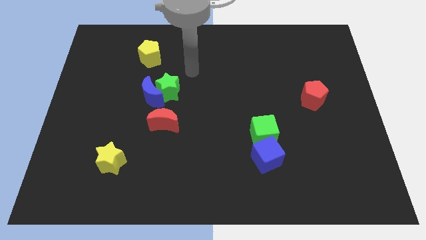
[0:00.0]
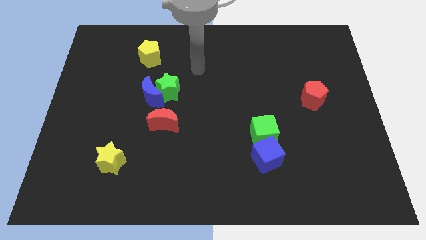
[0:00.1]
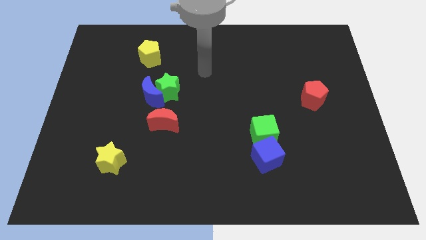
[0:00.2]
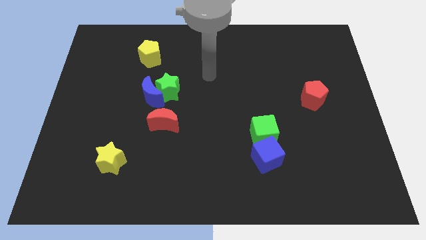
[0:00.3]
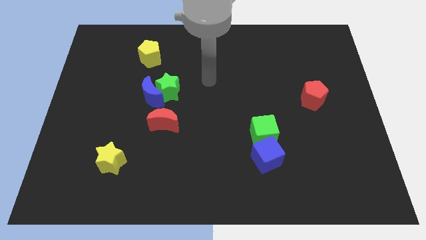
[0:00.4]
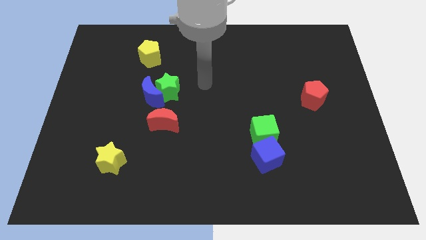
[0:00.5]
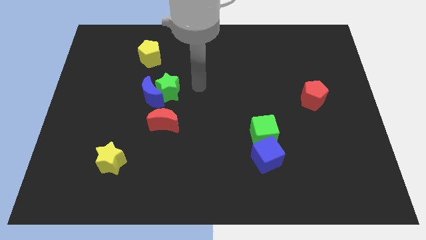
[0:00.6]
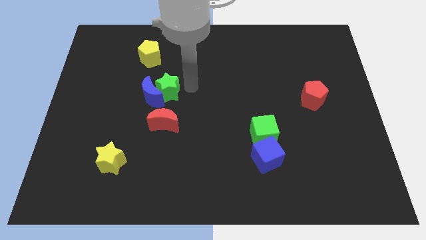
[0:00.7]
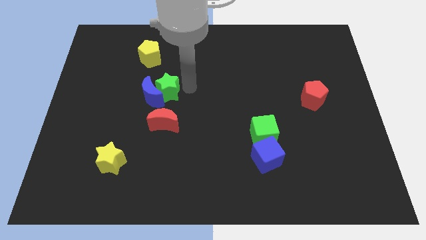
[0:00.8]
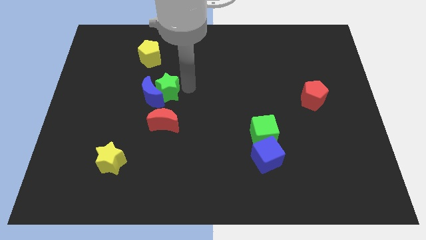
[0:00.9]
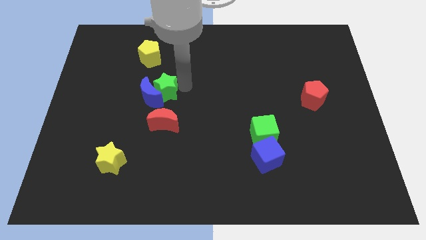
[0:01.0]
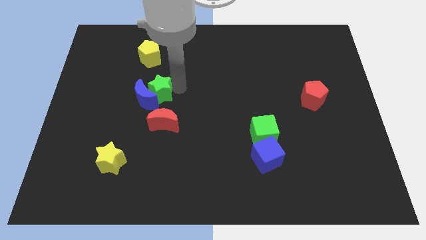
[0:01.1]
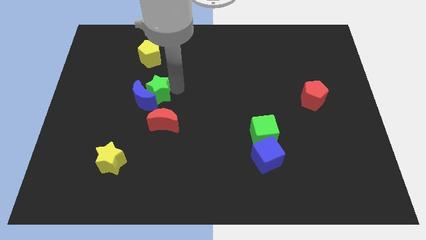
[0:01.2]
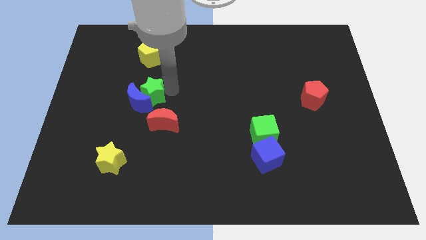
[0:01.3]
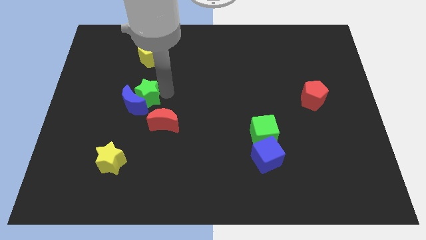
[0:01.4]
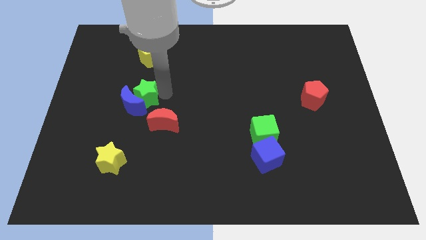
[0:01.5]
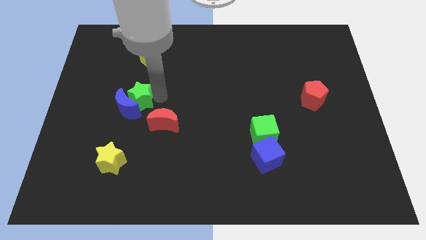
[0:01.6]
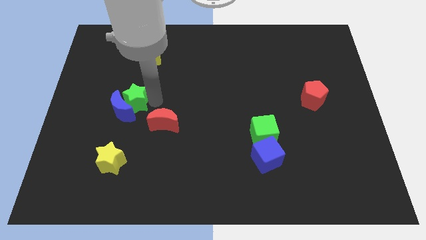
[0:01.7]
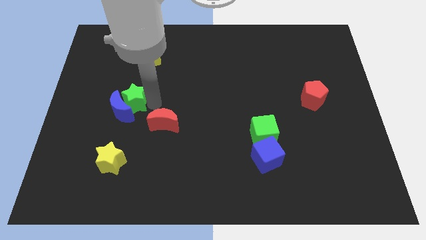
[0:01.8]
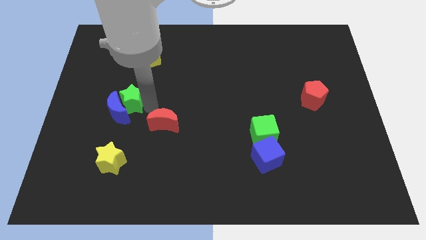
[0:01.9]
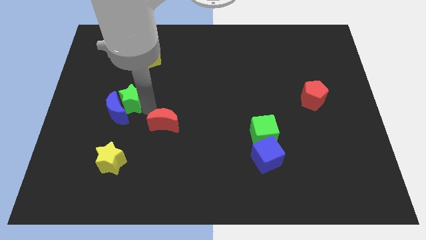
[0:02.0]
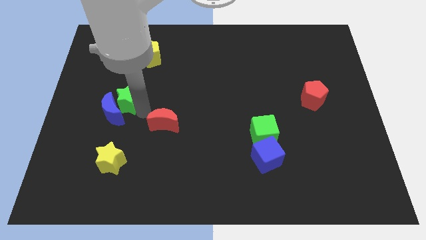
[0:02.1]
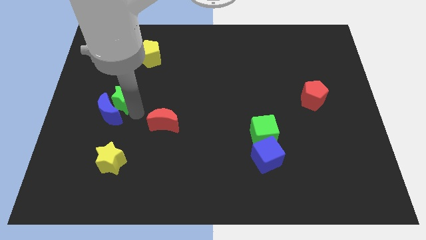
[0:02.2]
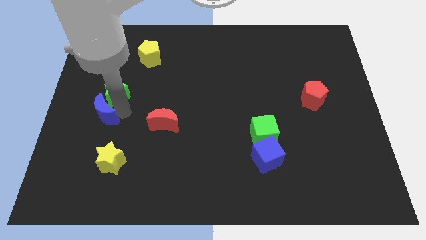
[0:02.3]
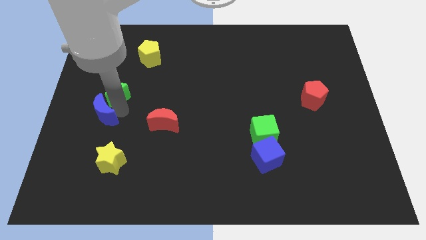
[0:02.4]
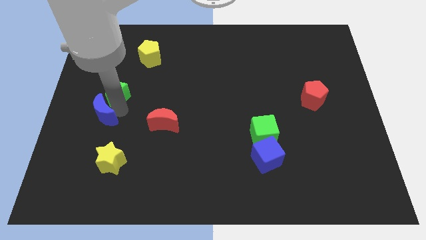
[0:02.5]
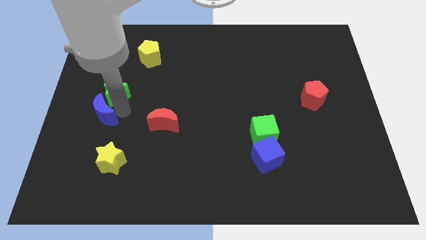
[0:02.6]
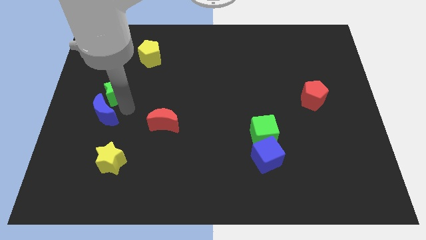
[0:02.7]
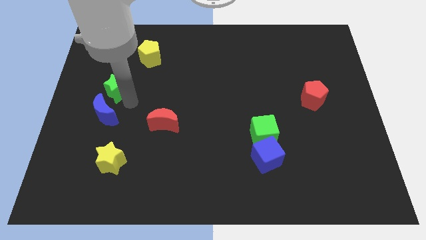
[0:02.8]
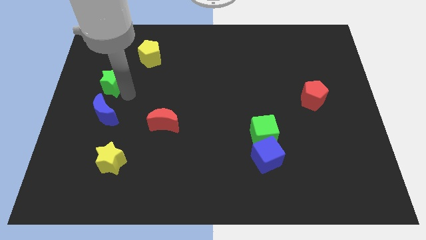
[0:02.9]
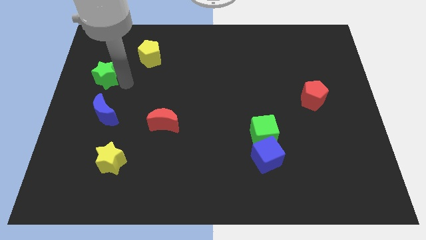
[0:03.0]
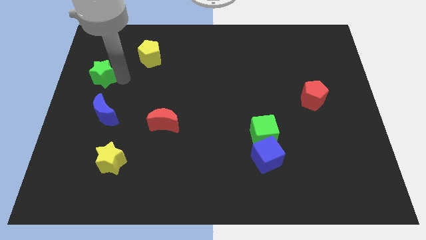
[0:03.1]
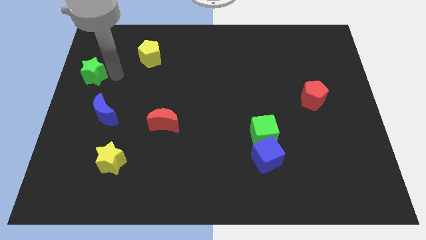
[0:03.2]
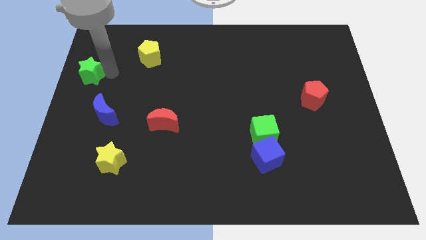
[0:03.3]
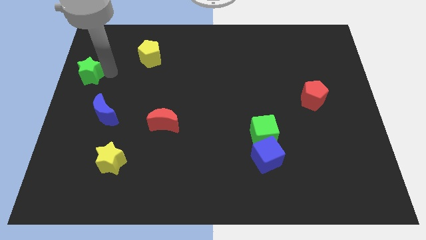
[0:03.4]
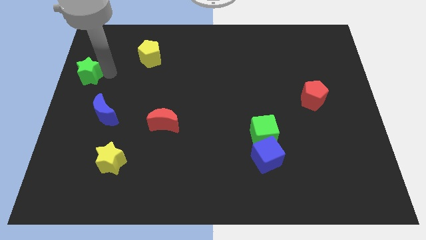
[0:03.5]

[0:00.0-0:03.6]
separate the green star from the blue crescent

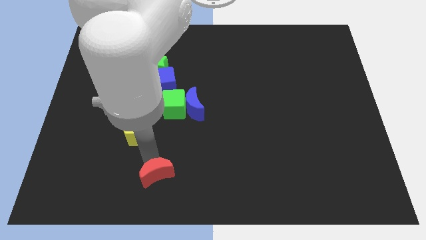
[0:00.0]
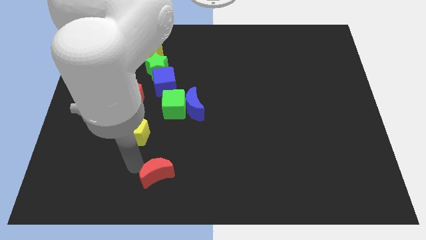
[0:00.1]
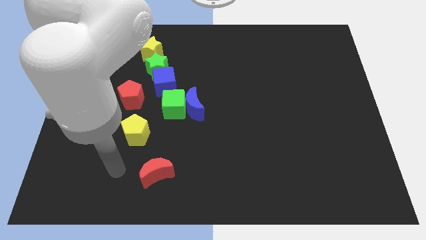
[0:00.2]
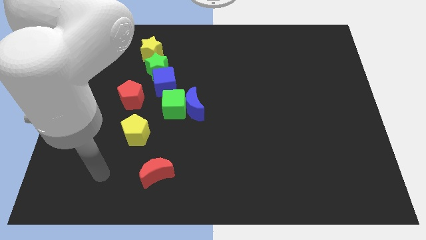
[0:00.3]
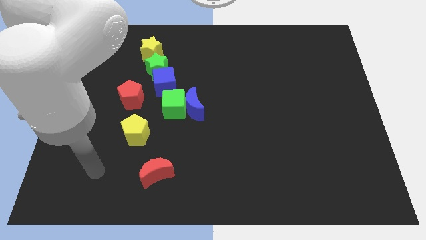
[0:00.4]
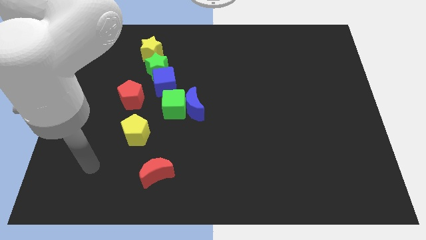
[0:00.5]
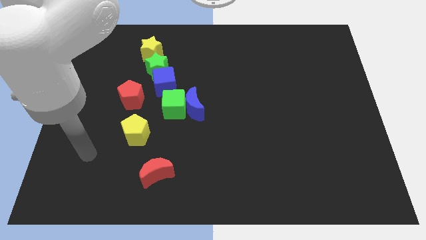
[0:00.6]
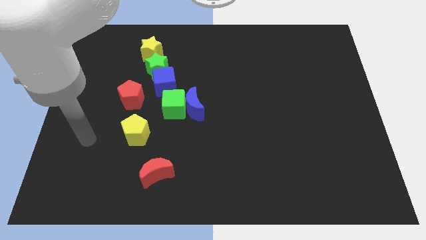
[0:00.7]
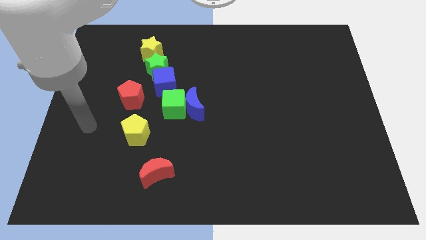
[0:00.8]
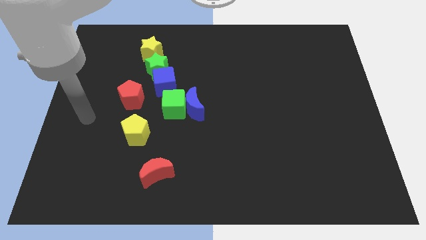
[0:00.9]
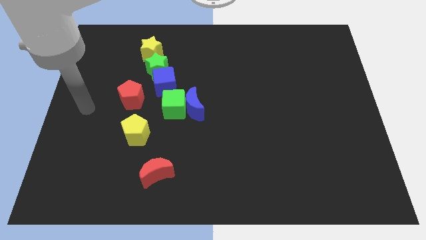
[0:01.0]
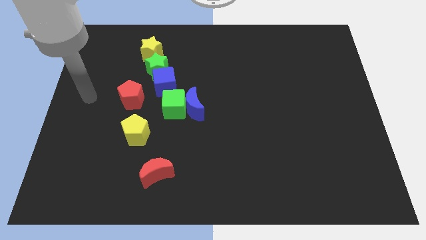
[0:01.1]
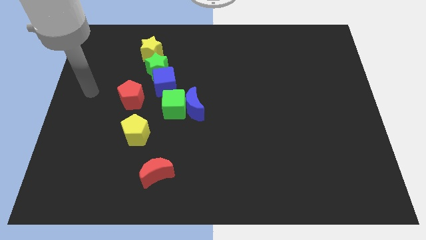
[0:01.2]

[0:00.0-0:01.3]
put your hand parallel left to the red pentagon

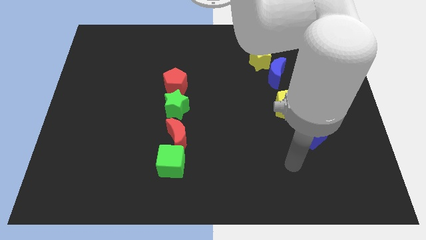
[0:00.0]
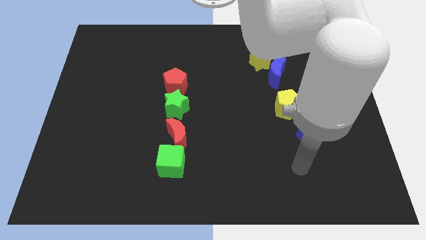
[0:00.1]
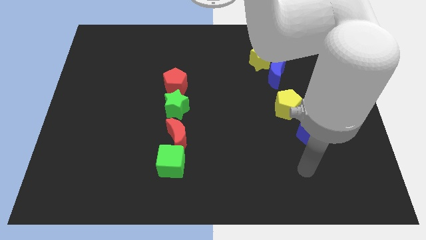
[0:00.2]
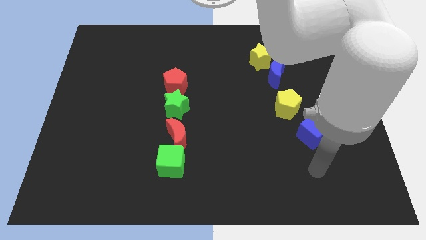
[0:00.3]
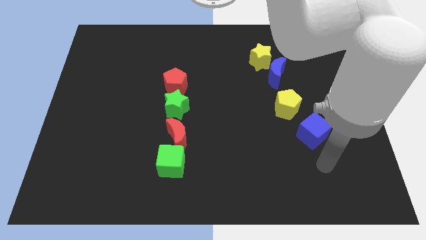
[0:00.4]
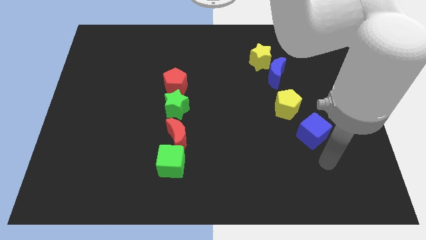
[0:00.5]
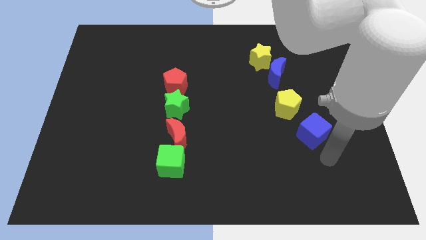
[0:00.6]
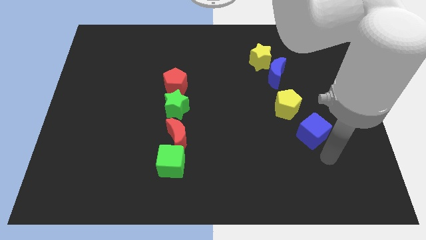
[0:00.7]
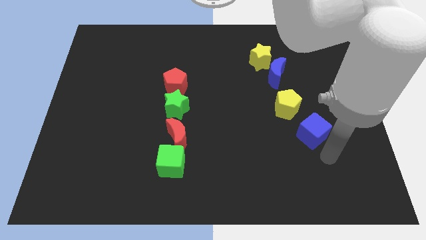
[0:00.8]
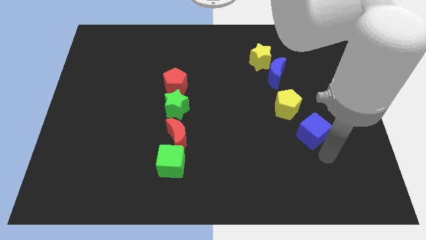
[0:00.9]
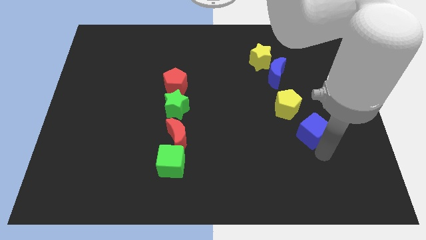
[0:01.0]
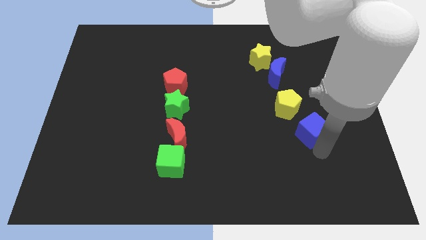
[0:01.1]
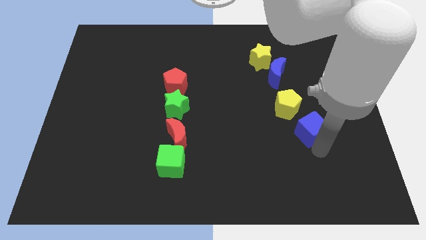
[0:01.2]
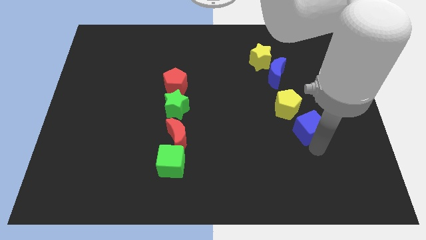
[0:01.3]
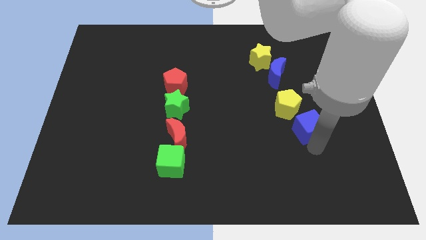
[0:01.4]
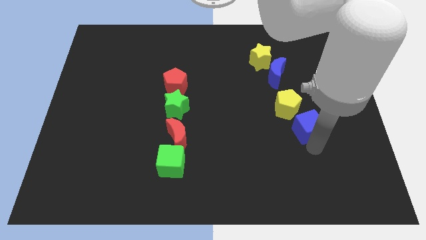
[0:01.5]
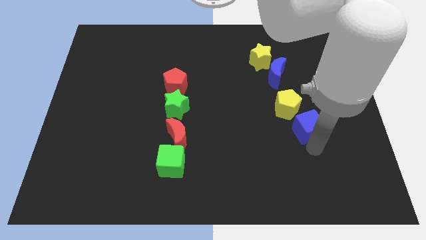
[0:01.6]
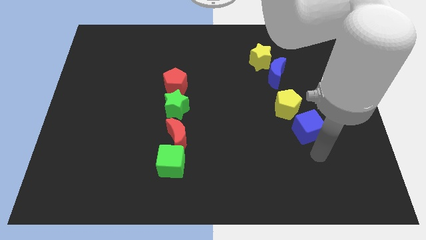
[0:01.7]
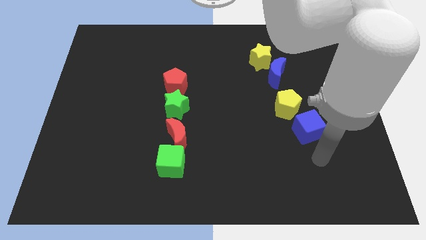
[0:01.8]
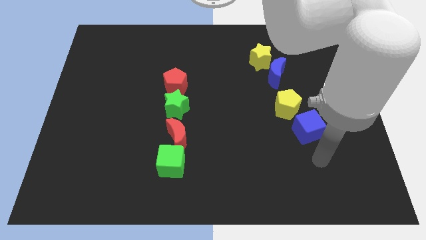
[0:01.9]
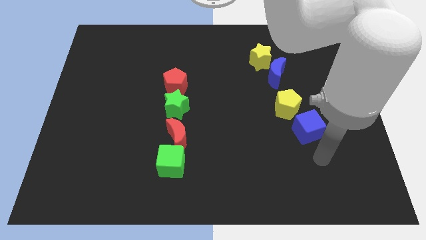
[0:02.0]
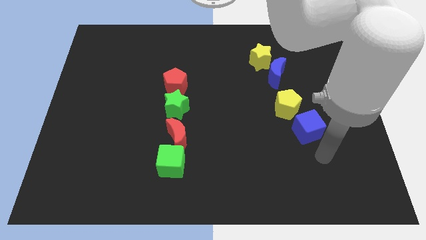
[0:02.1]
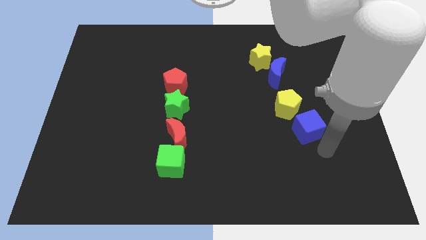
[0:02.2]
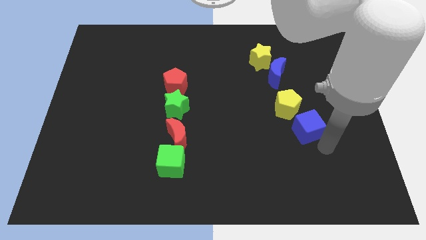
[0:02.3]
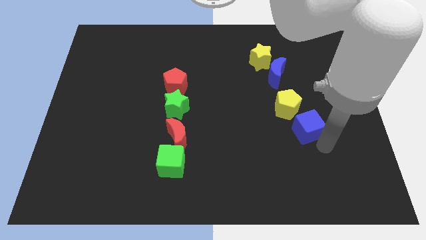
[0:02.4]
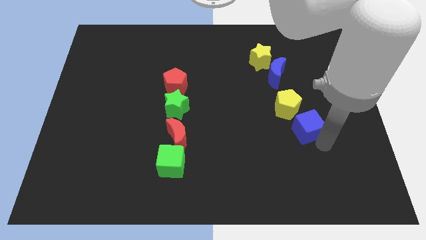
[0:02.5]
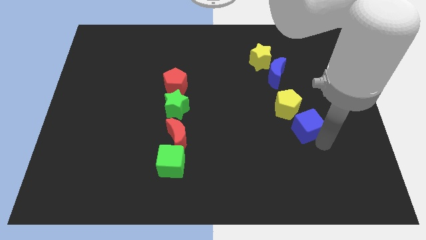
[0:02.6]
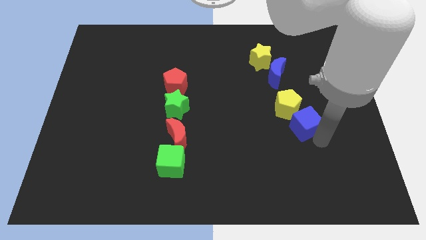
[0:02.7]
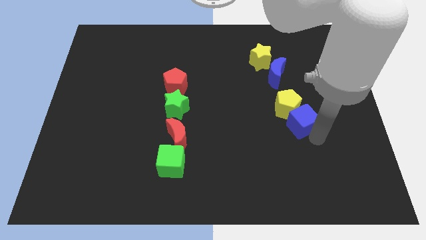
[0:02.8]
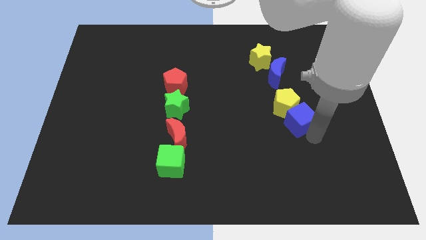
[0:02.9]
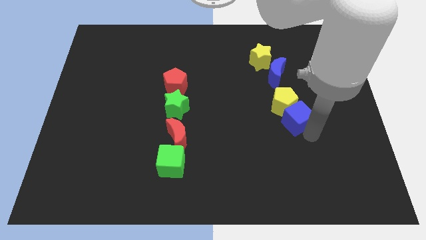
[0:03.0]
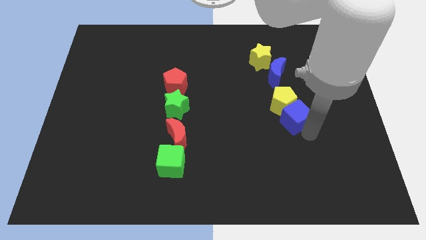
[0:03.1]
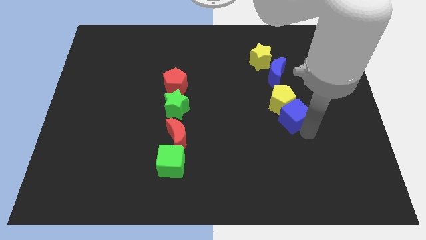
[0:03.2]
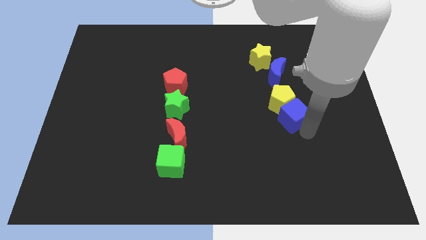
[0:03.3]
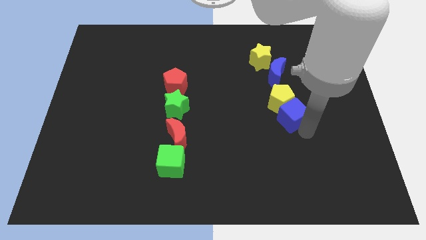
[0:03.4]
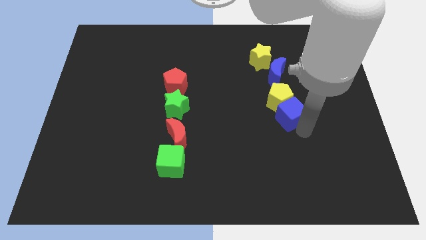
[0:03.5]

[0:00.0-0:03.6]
slide the blue cube into the yellow pentagon

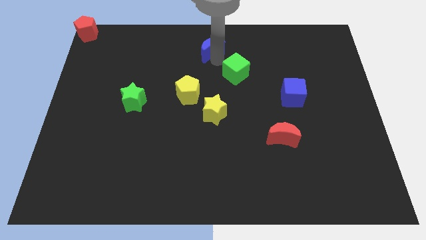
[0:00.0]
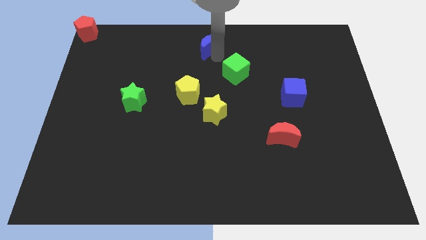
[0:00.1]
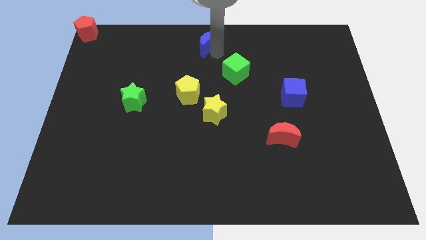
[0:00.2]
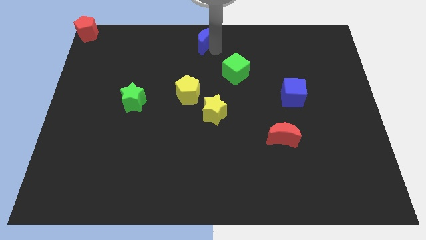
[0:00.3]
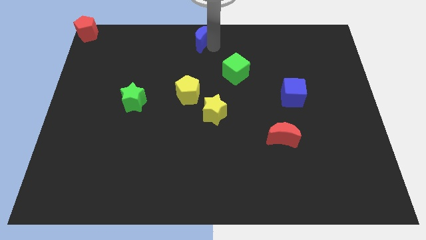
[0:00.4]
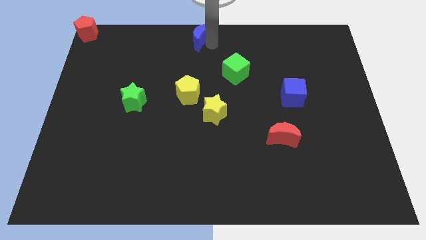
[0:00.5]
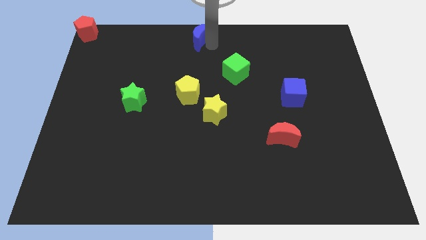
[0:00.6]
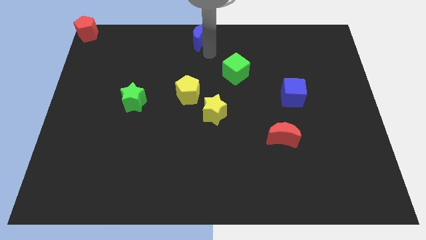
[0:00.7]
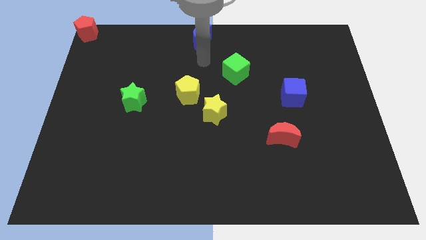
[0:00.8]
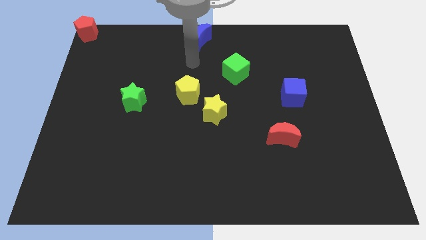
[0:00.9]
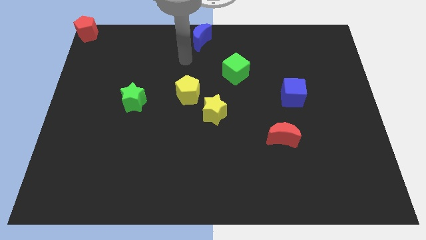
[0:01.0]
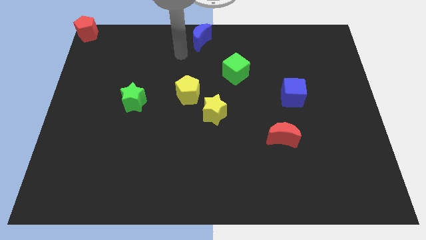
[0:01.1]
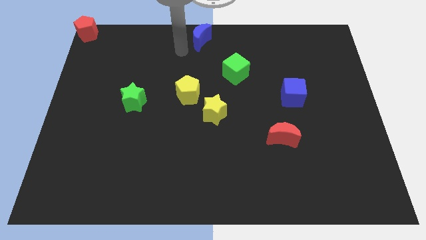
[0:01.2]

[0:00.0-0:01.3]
place the blue moon at the top center
